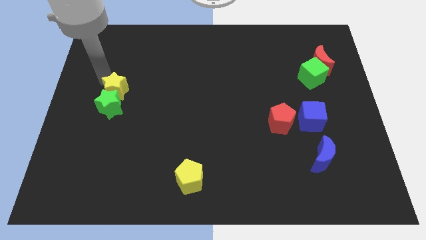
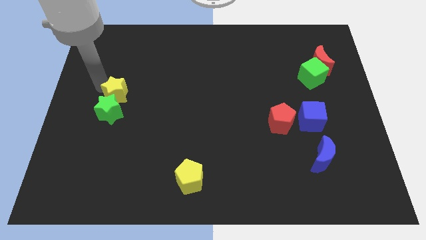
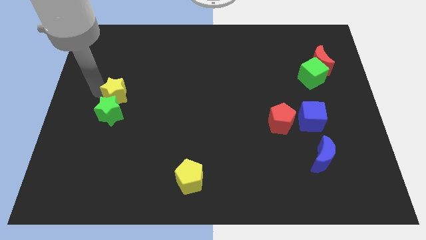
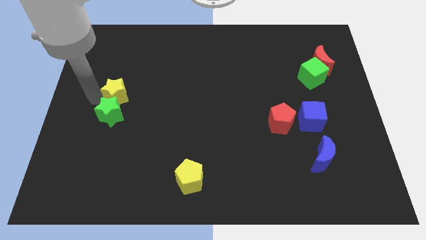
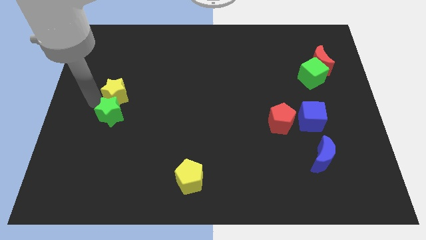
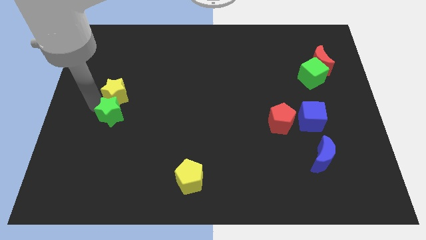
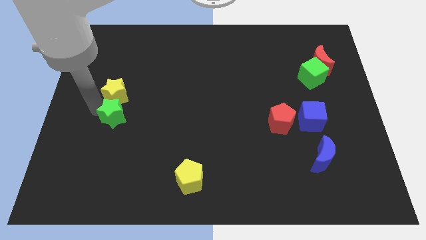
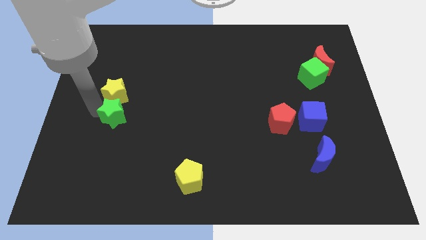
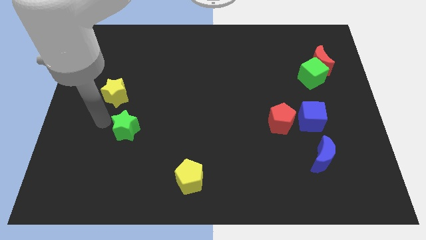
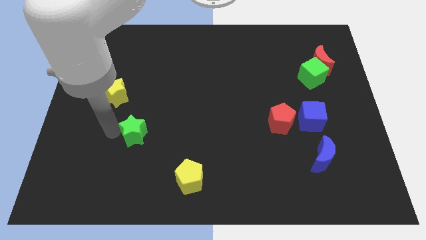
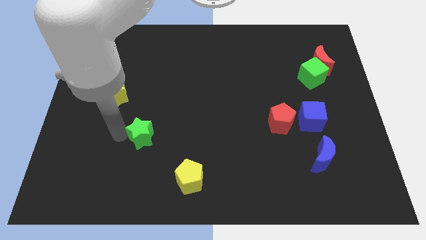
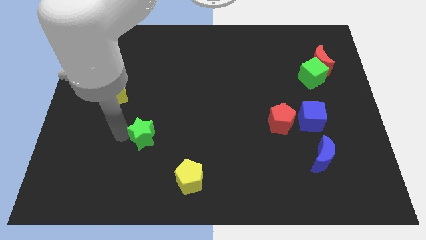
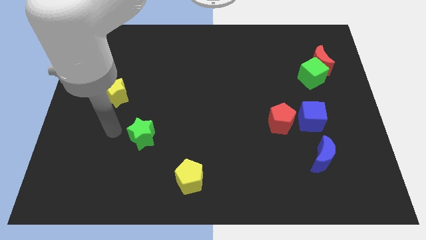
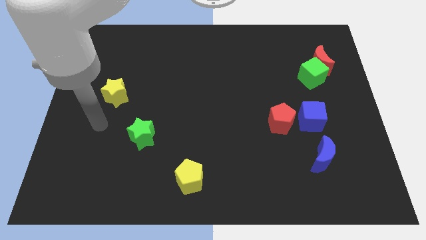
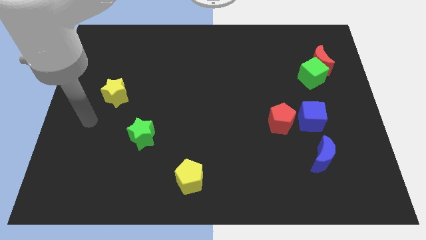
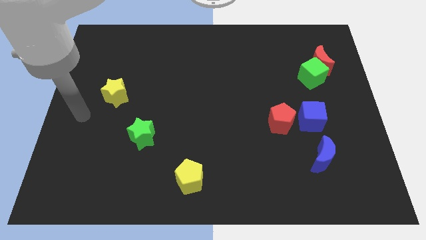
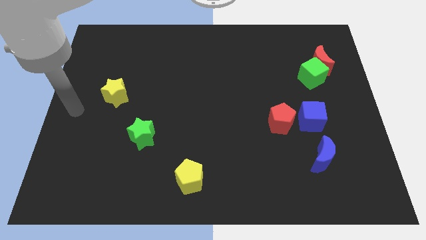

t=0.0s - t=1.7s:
push green star to the right side

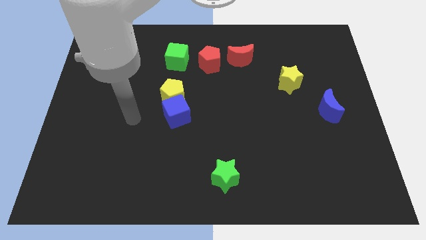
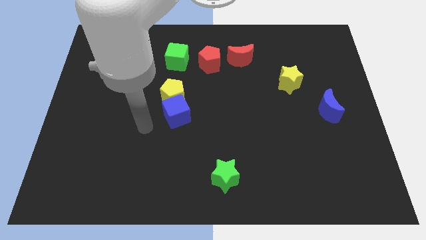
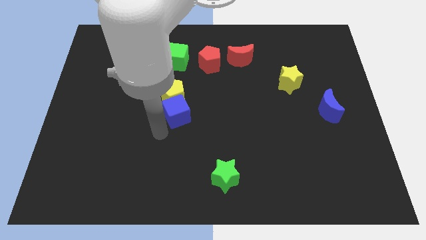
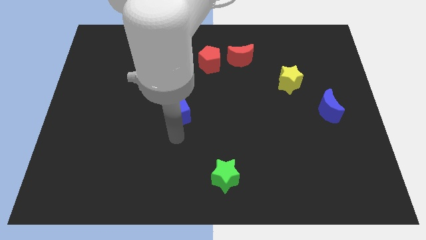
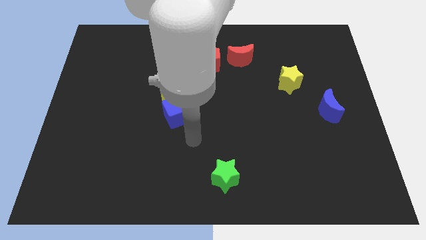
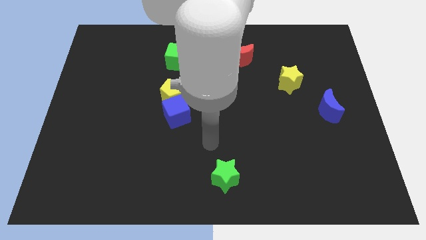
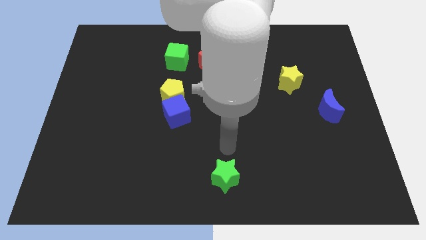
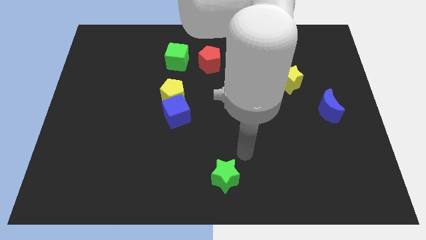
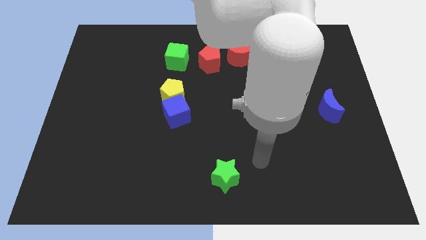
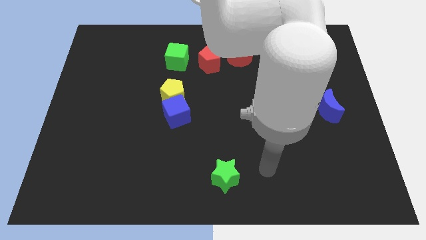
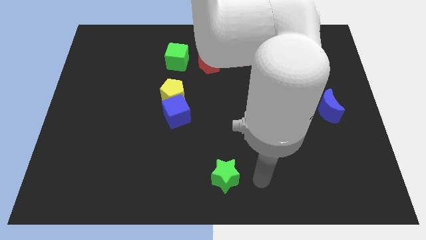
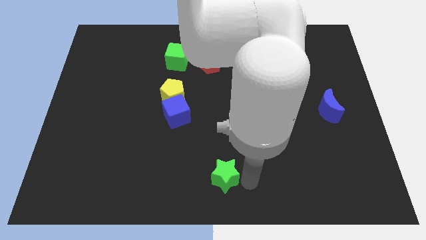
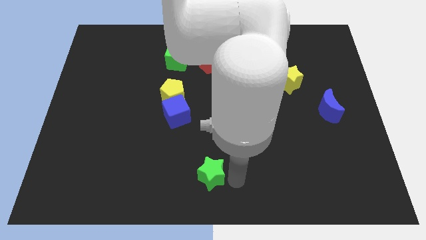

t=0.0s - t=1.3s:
move your arm to the right of green star

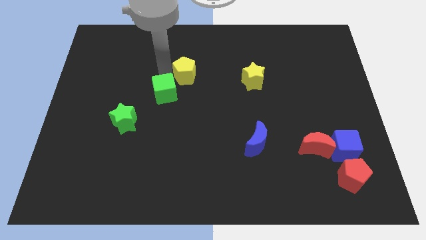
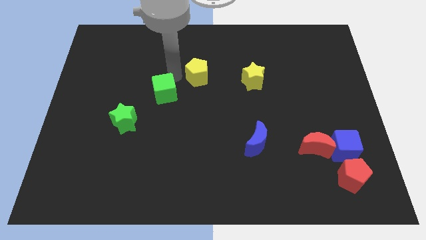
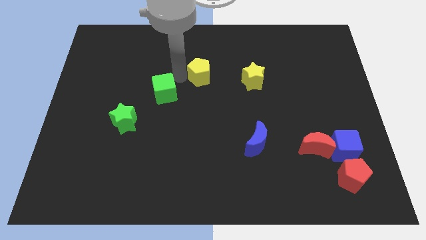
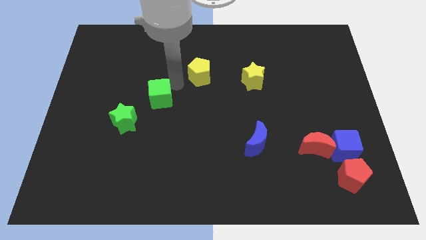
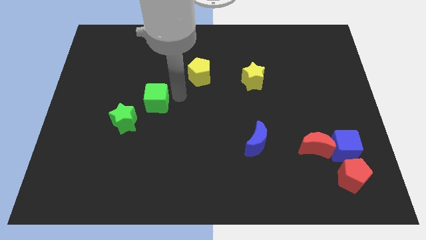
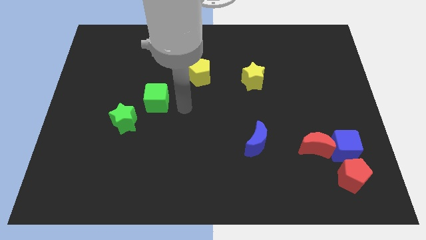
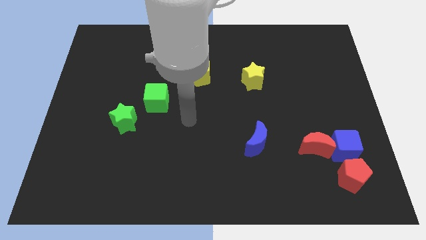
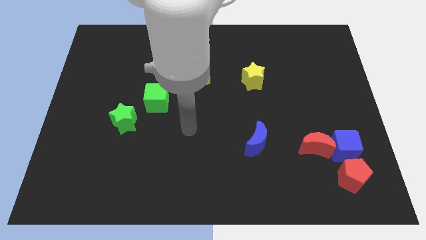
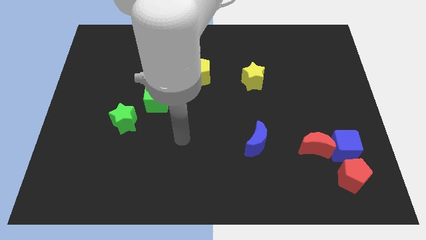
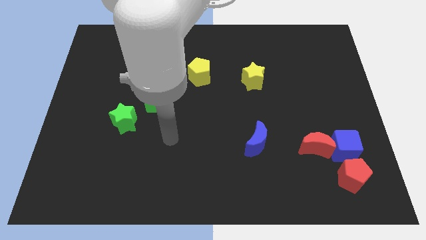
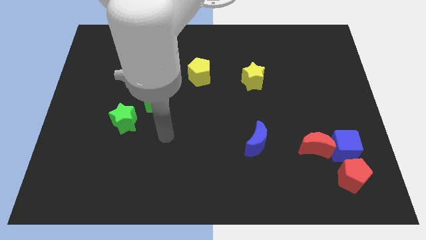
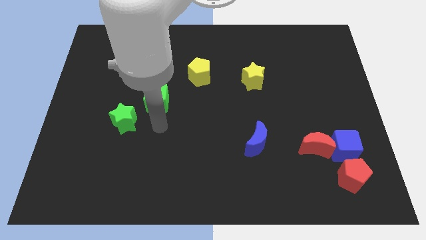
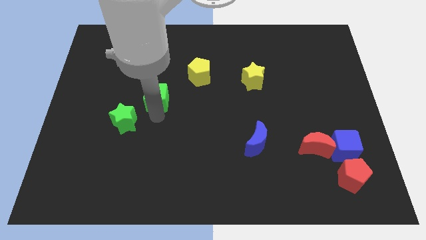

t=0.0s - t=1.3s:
place the arm down to the green cube

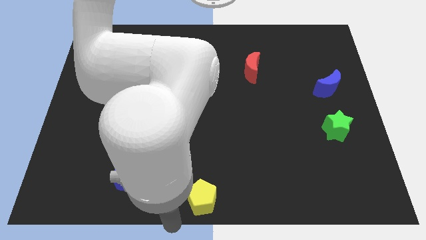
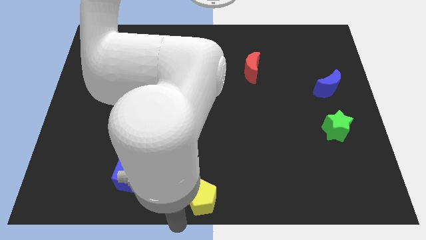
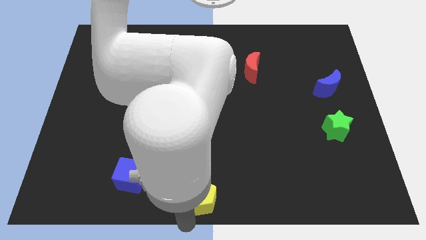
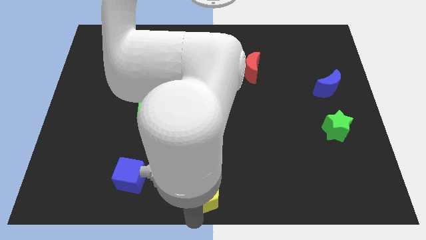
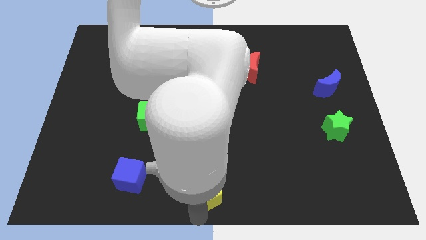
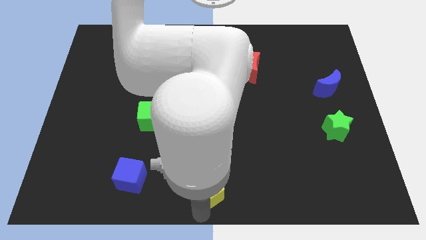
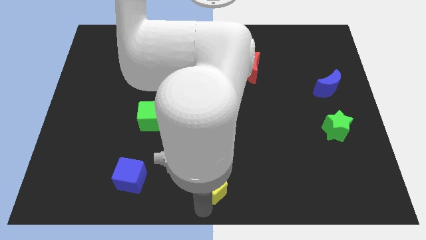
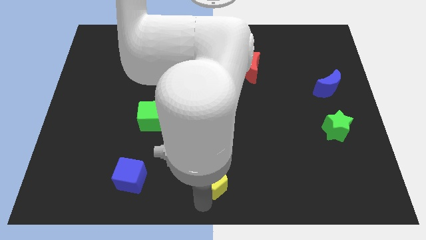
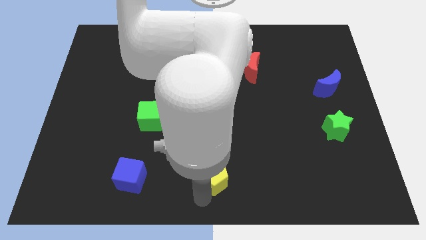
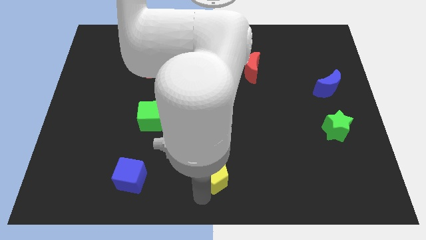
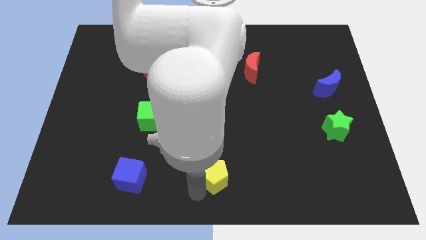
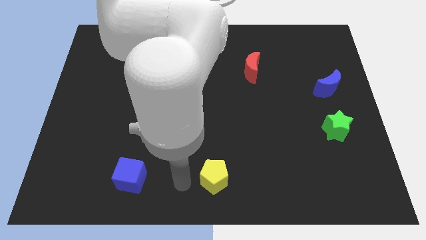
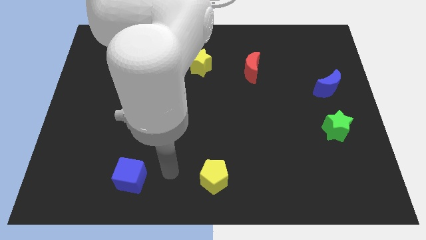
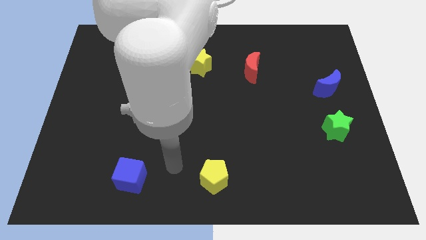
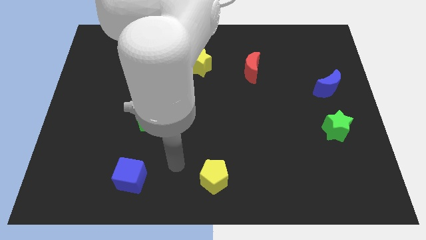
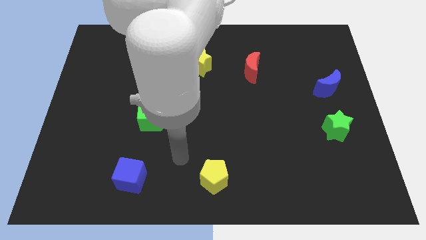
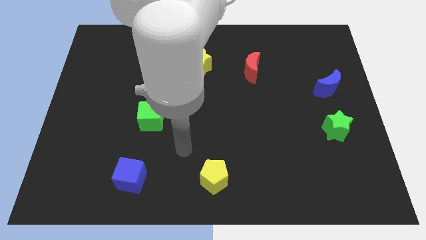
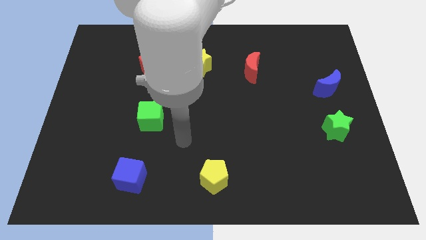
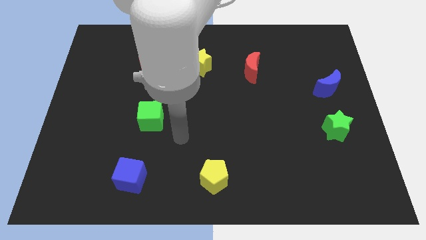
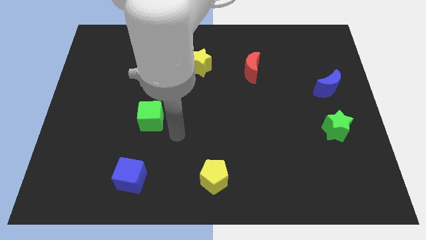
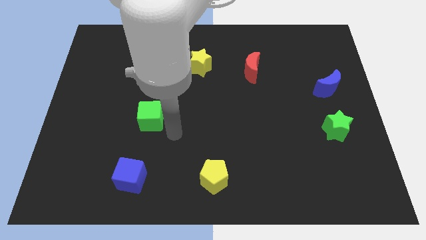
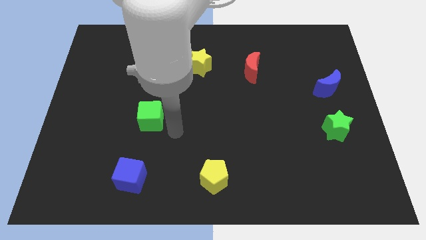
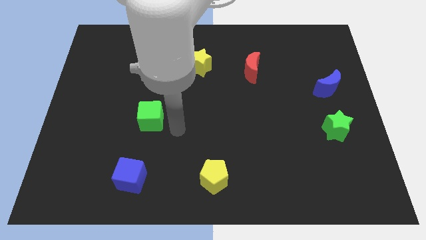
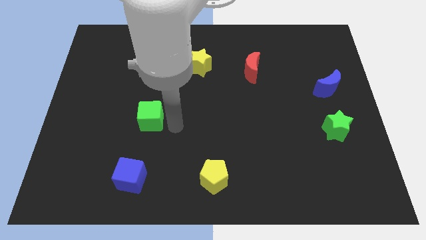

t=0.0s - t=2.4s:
place the yellow pentagon to the right of the blue cube

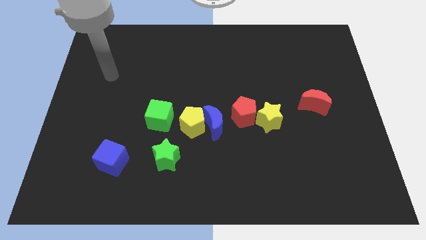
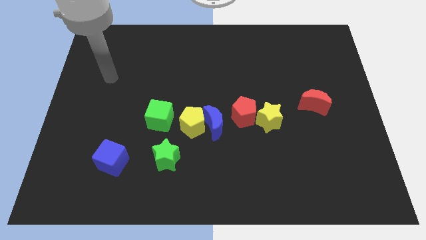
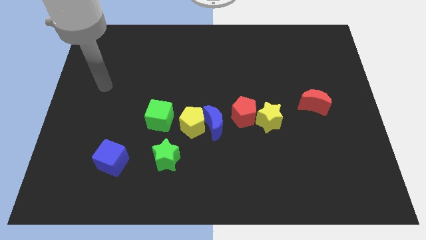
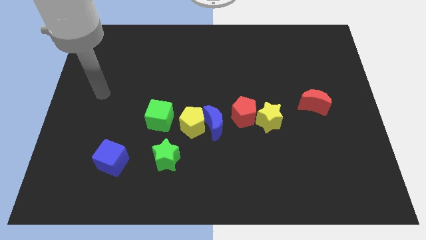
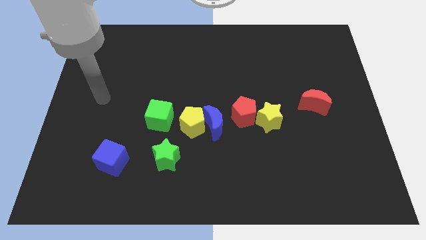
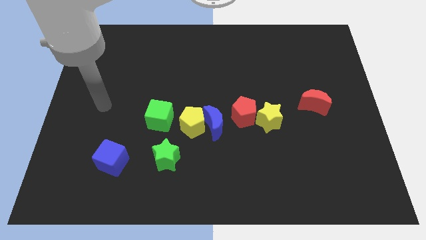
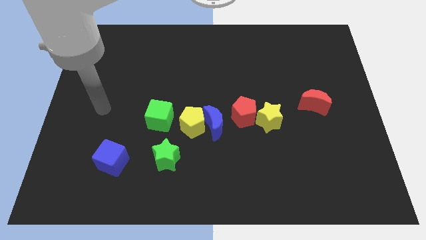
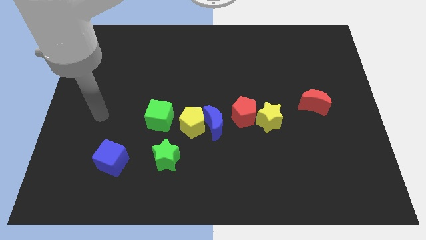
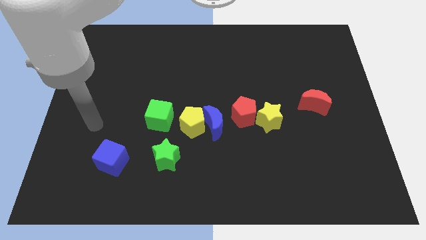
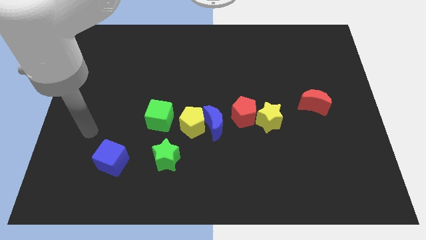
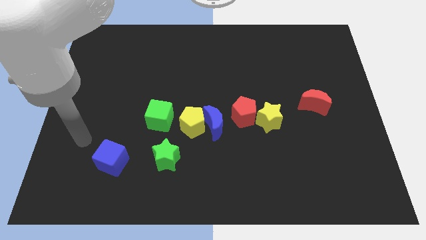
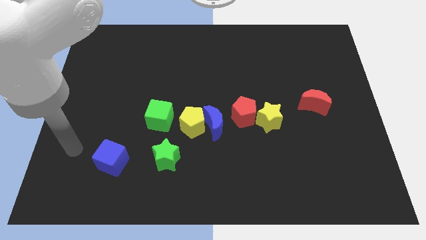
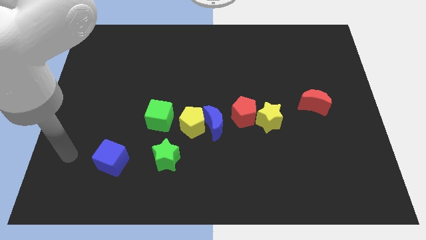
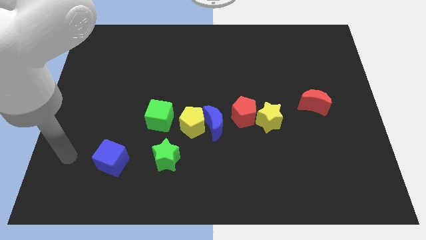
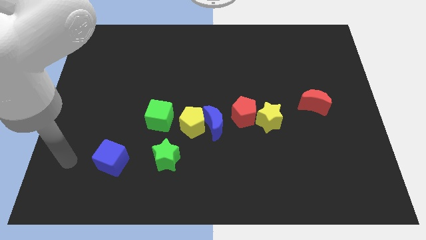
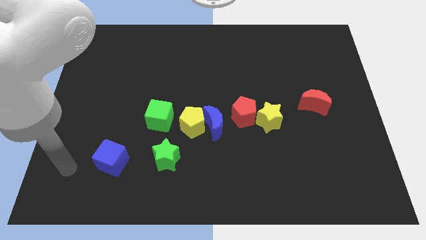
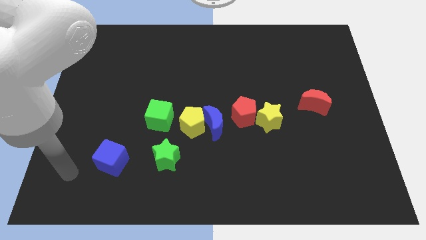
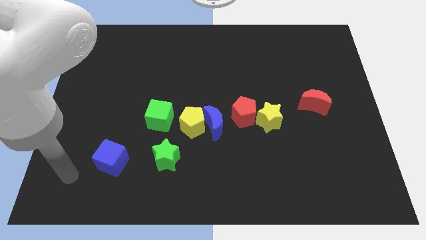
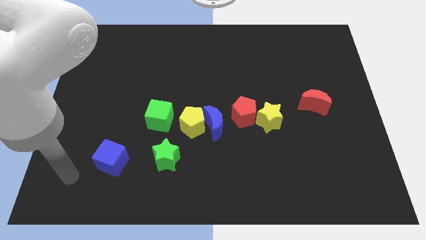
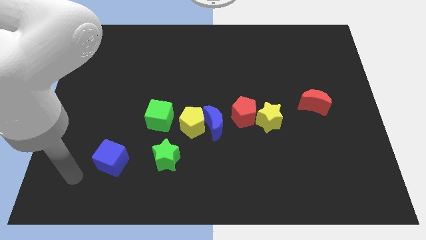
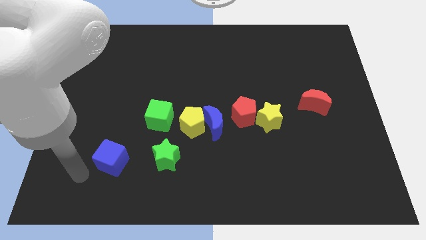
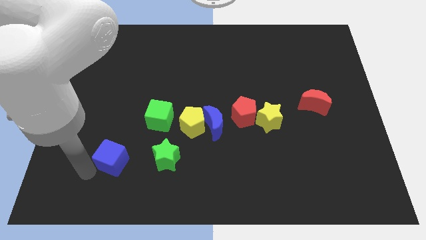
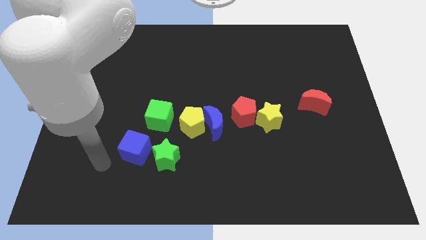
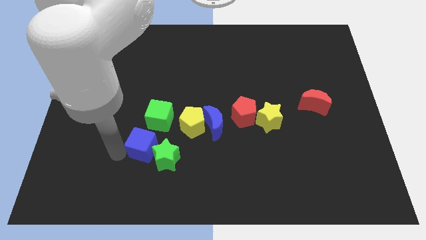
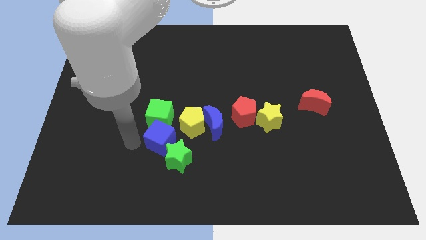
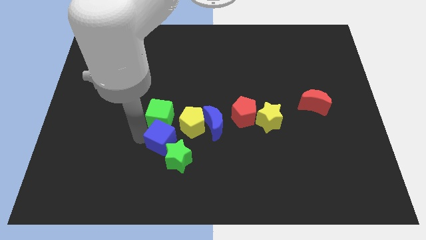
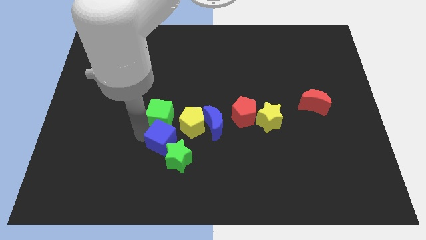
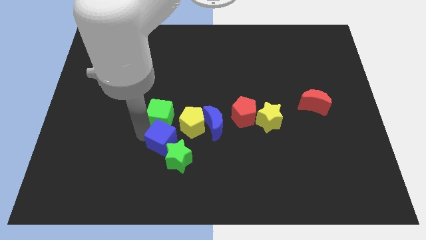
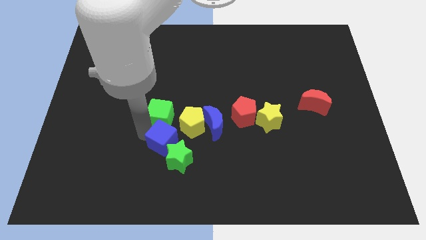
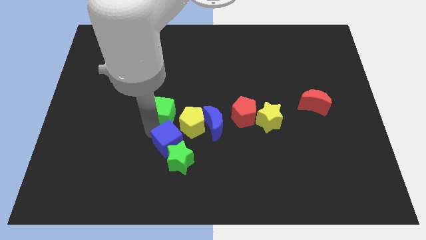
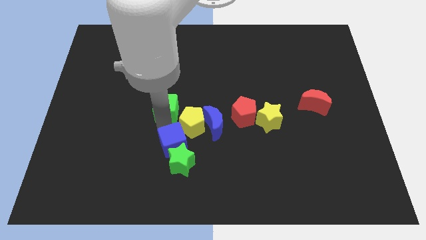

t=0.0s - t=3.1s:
push the blue cube into the green star
